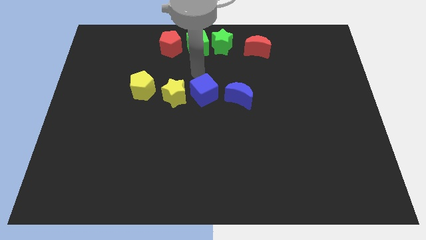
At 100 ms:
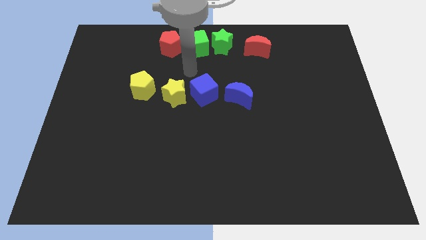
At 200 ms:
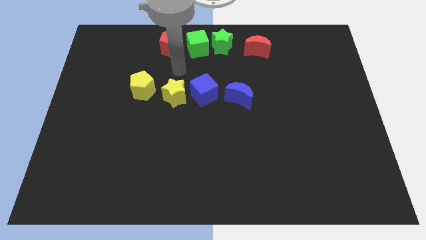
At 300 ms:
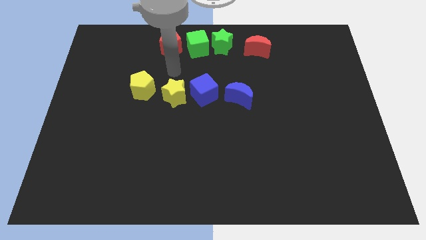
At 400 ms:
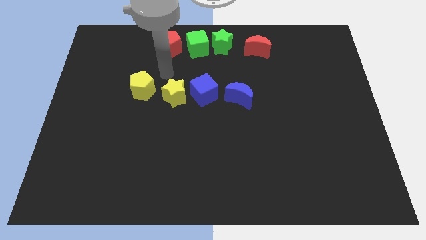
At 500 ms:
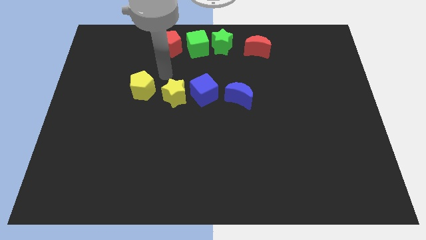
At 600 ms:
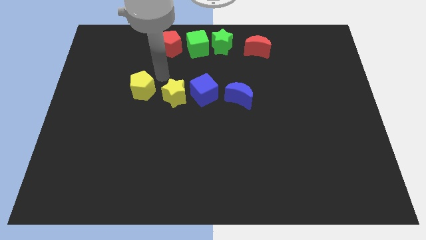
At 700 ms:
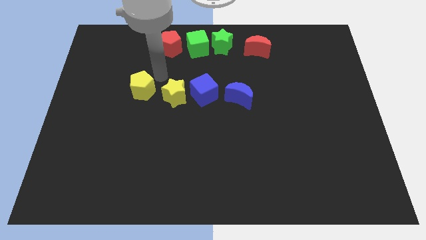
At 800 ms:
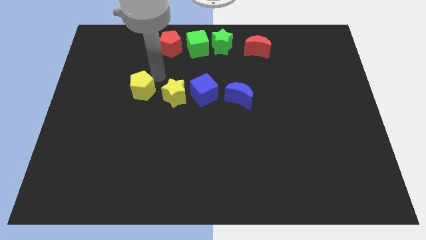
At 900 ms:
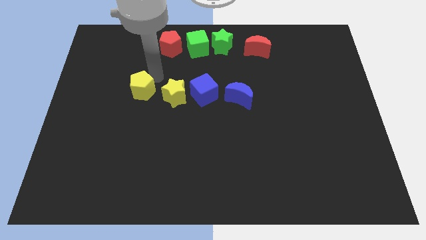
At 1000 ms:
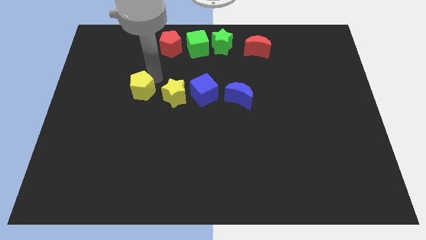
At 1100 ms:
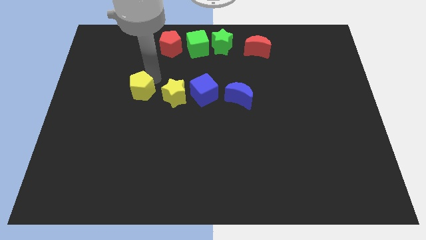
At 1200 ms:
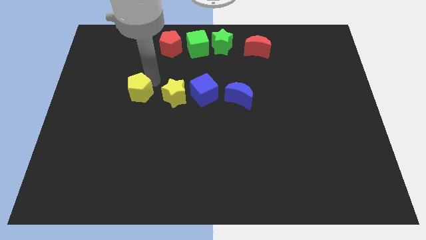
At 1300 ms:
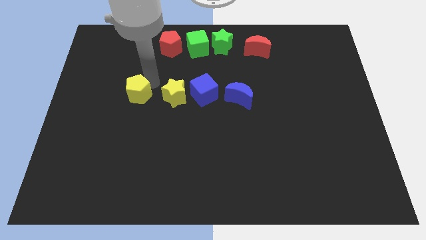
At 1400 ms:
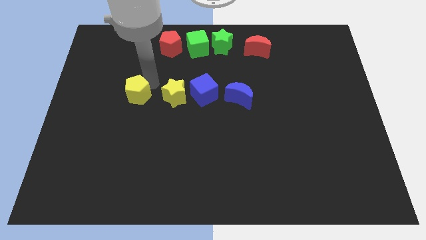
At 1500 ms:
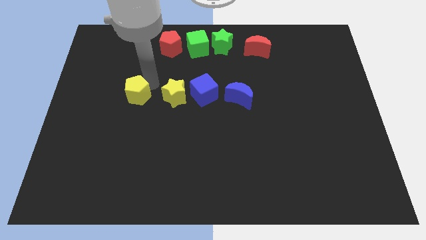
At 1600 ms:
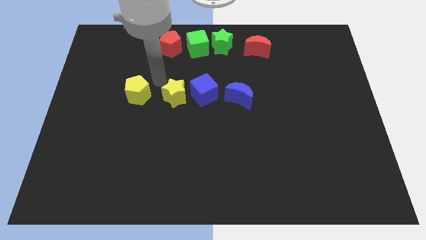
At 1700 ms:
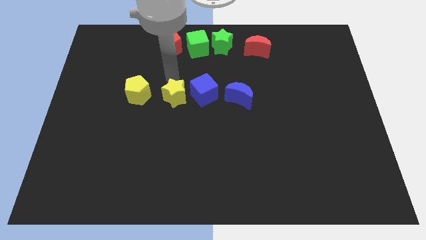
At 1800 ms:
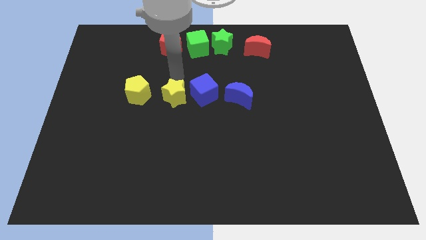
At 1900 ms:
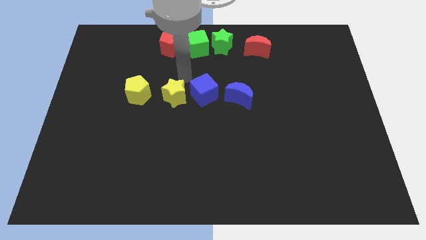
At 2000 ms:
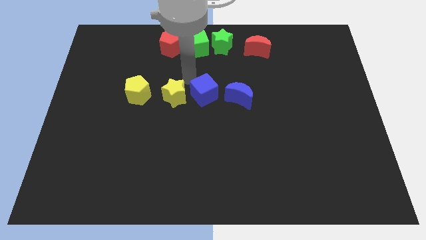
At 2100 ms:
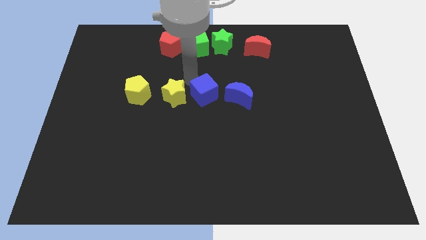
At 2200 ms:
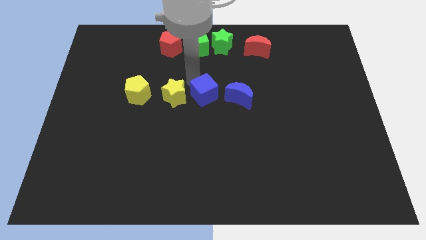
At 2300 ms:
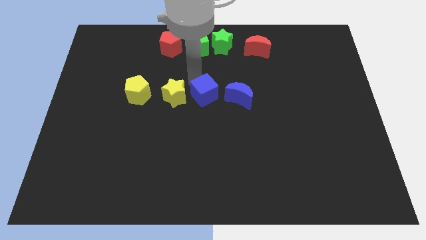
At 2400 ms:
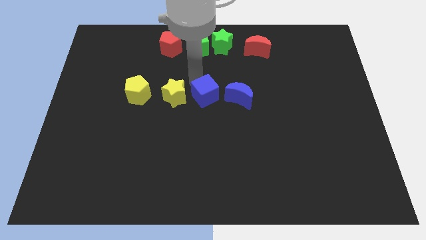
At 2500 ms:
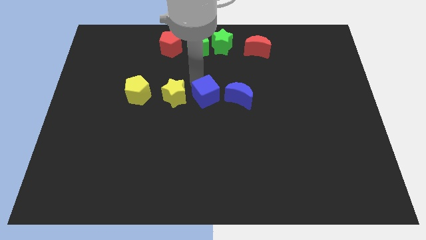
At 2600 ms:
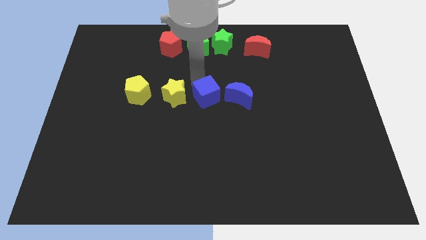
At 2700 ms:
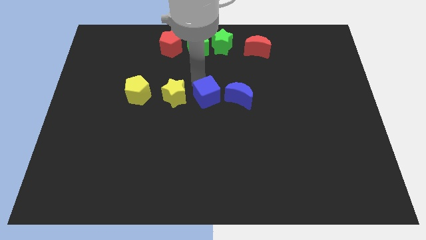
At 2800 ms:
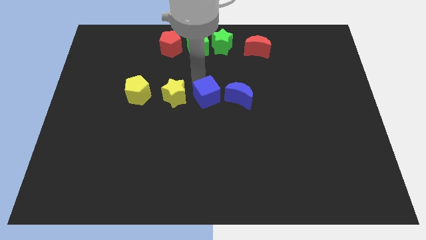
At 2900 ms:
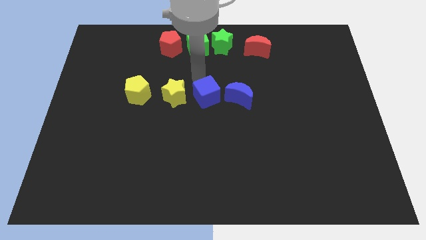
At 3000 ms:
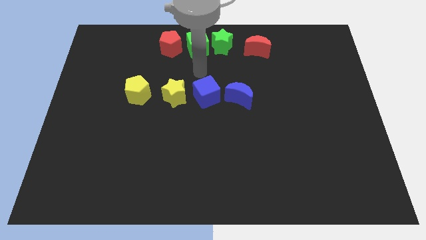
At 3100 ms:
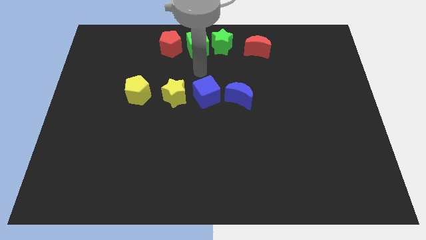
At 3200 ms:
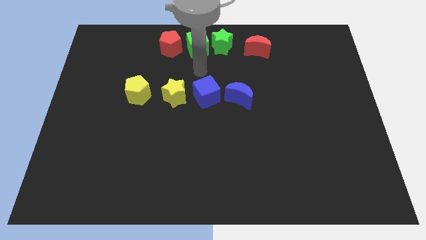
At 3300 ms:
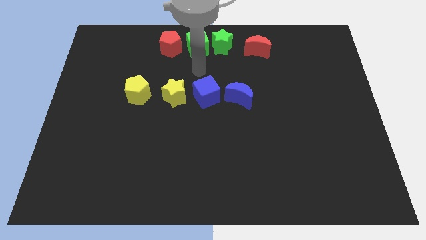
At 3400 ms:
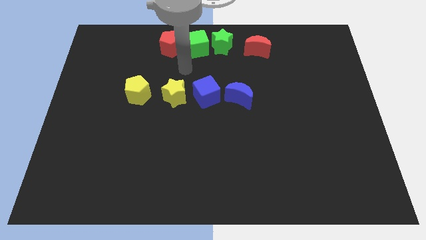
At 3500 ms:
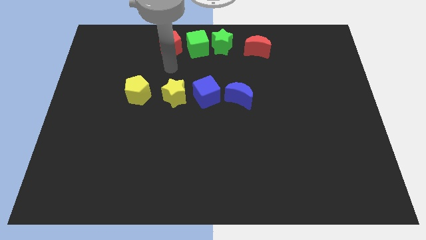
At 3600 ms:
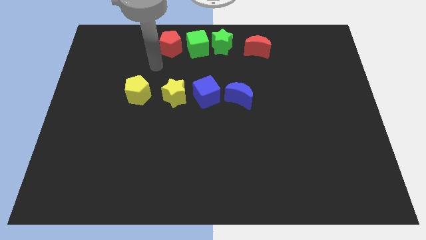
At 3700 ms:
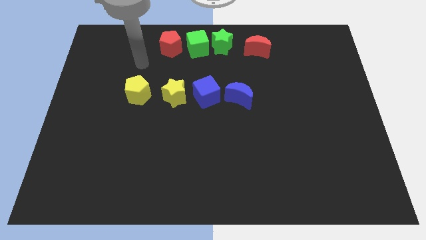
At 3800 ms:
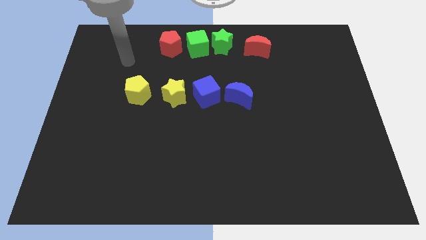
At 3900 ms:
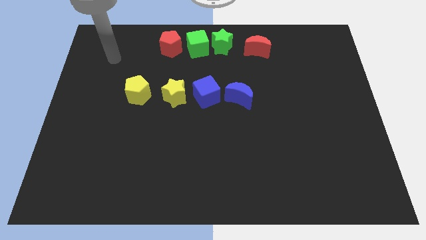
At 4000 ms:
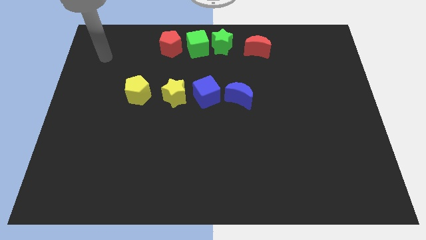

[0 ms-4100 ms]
ajust blue and the yellow blocks to form a horizontal line

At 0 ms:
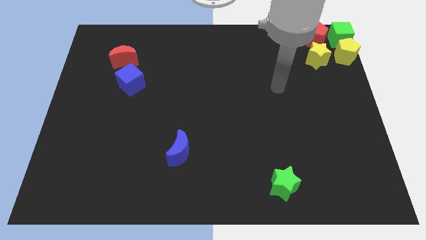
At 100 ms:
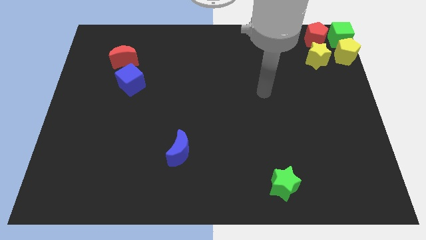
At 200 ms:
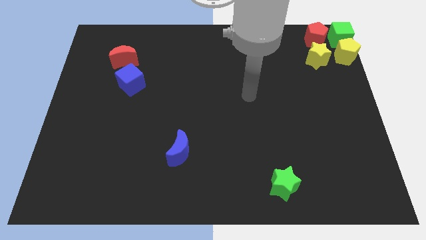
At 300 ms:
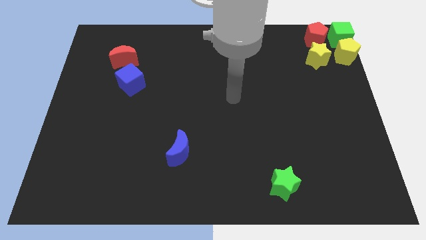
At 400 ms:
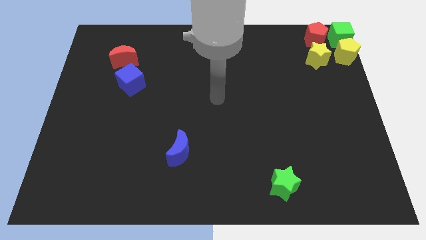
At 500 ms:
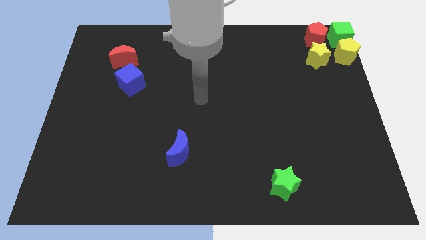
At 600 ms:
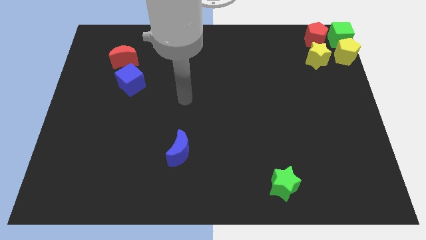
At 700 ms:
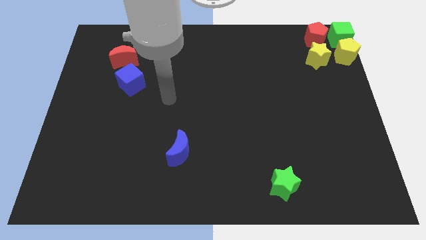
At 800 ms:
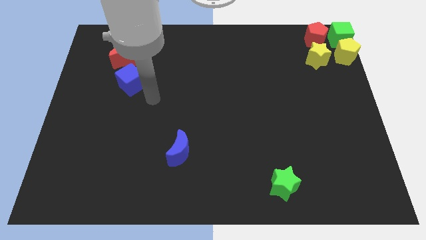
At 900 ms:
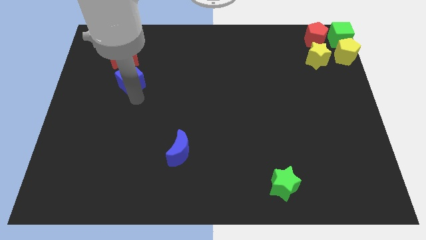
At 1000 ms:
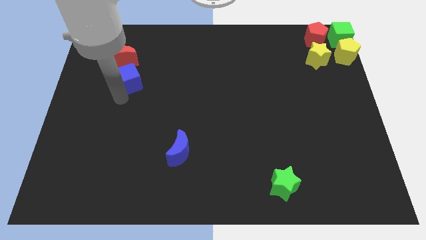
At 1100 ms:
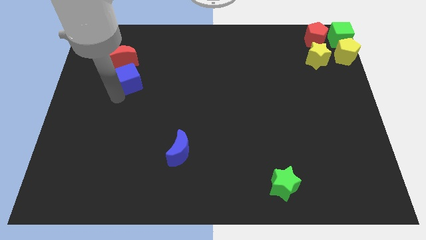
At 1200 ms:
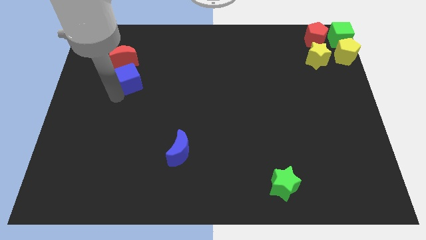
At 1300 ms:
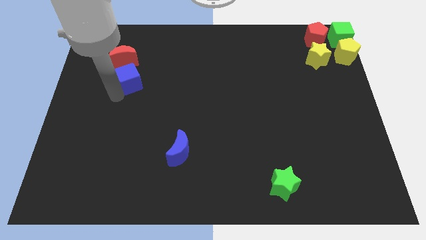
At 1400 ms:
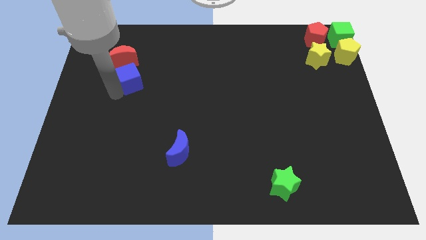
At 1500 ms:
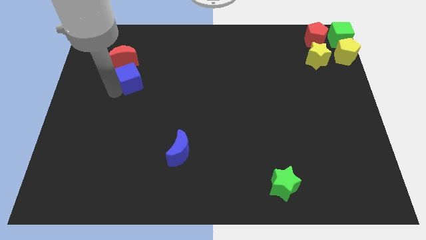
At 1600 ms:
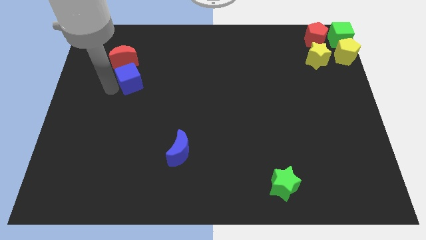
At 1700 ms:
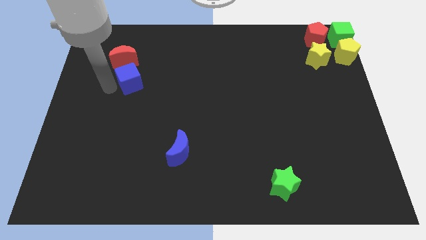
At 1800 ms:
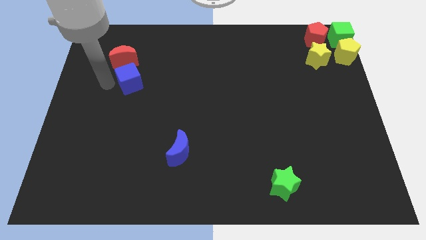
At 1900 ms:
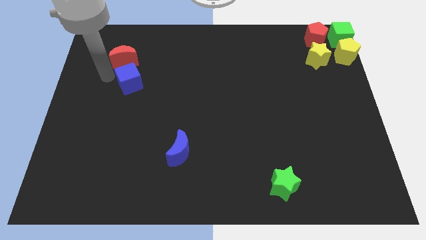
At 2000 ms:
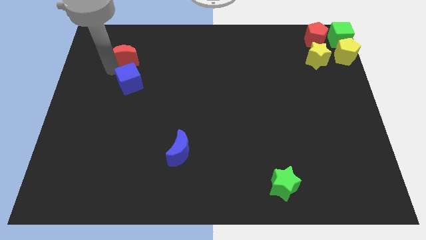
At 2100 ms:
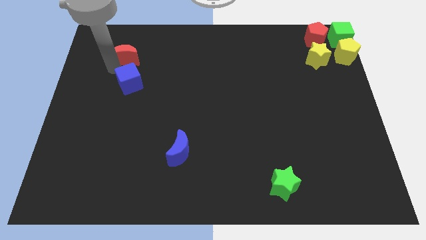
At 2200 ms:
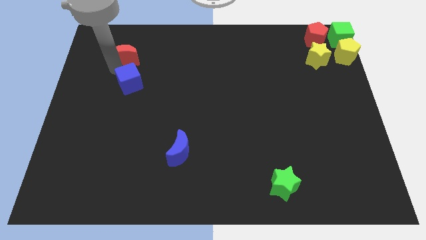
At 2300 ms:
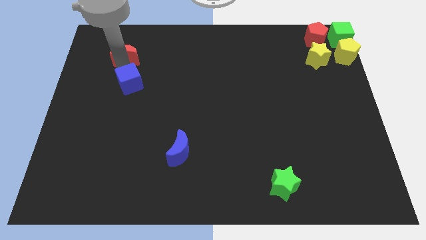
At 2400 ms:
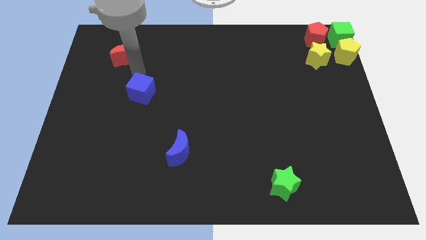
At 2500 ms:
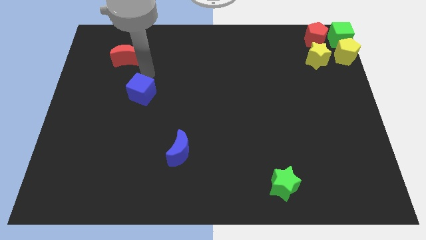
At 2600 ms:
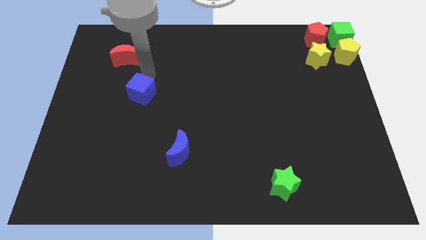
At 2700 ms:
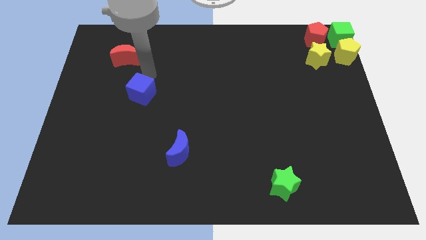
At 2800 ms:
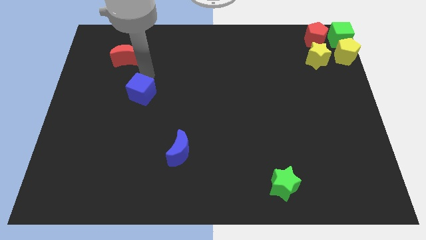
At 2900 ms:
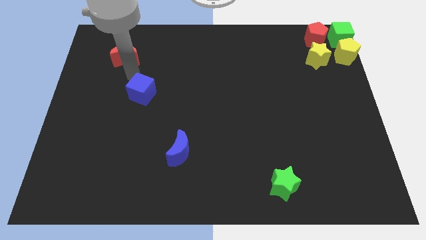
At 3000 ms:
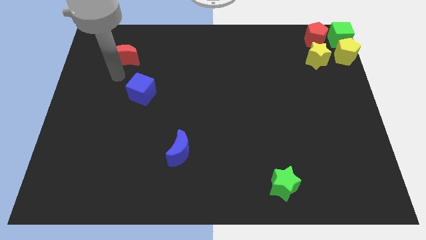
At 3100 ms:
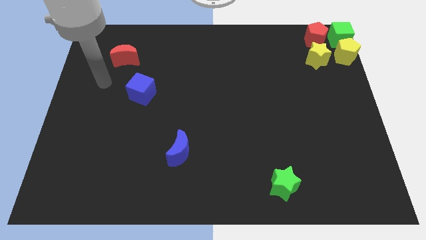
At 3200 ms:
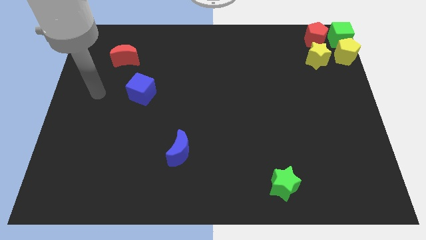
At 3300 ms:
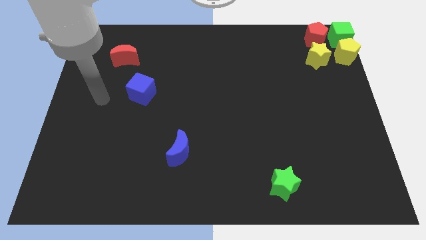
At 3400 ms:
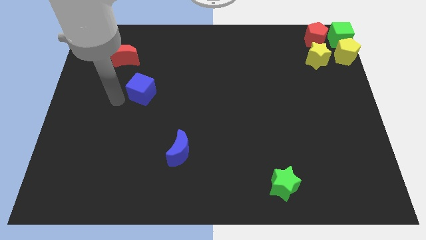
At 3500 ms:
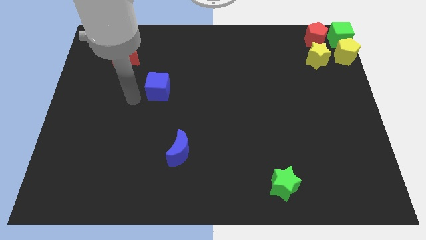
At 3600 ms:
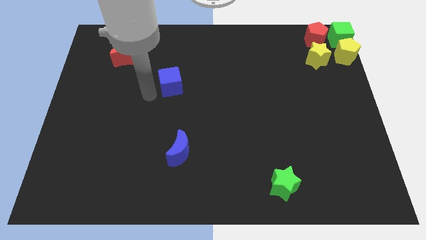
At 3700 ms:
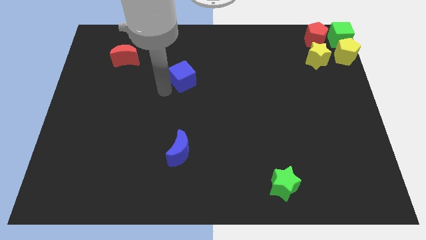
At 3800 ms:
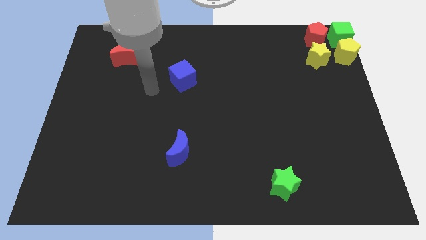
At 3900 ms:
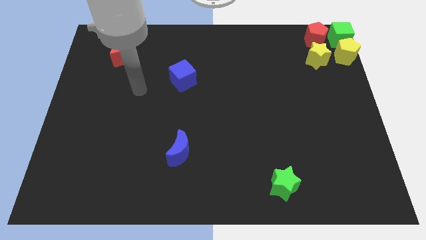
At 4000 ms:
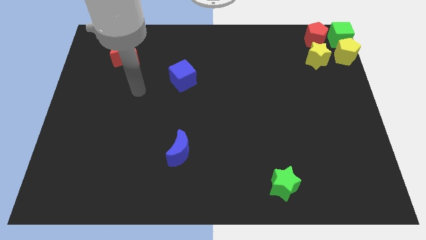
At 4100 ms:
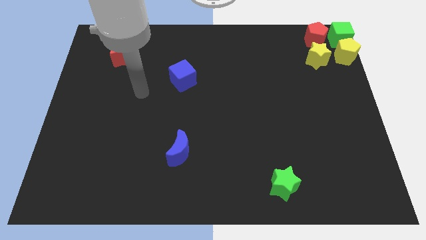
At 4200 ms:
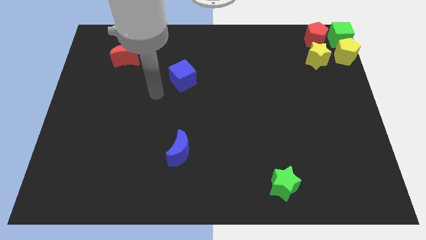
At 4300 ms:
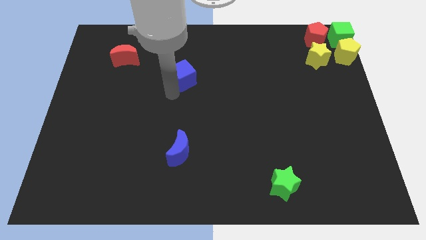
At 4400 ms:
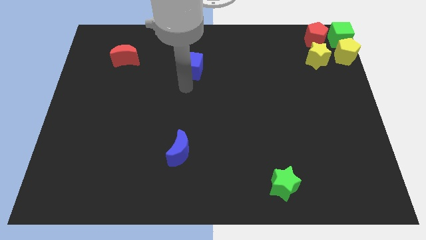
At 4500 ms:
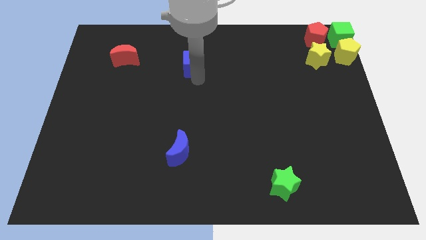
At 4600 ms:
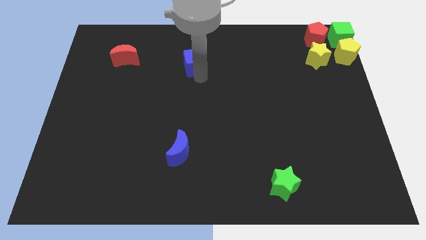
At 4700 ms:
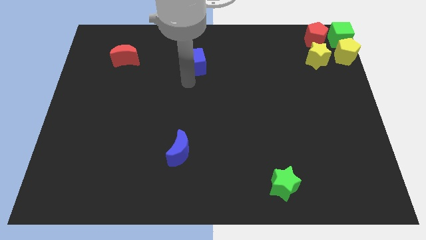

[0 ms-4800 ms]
place the blue cube above the blue crescent
